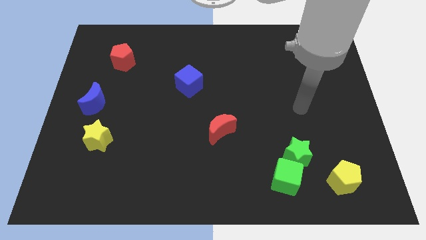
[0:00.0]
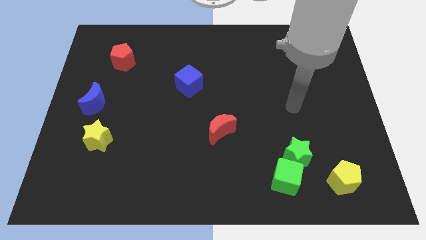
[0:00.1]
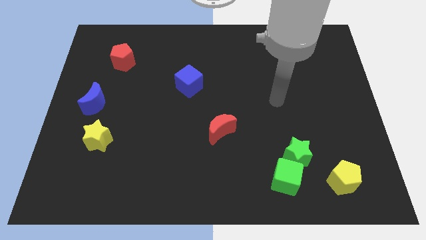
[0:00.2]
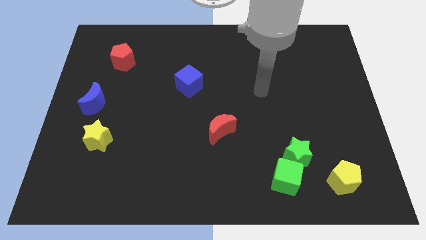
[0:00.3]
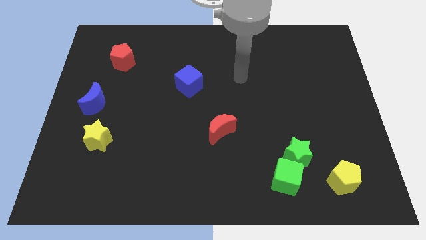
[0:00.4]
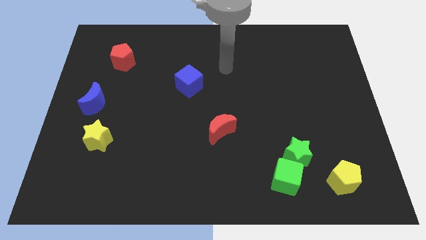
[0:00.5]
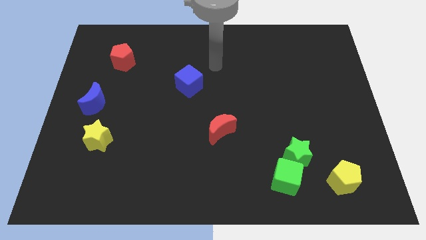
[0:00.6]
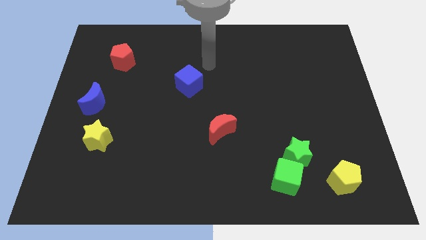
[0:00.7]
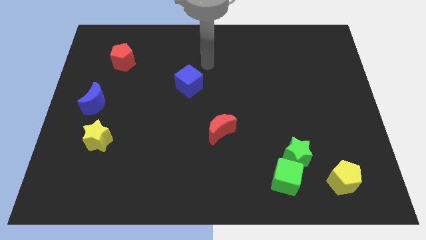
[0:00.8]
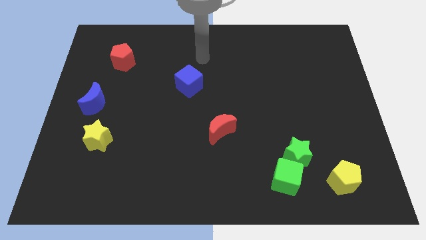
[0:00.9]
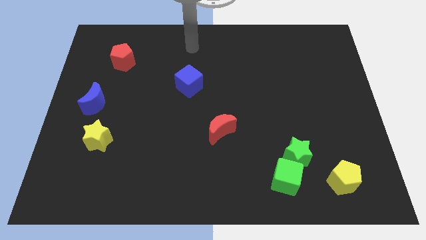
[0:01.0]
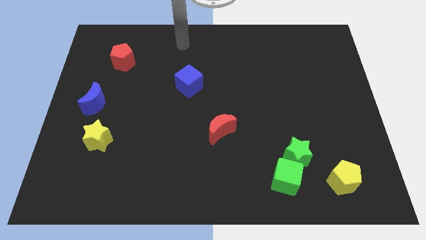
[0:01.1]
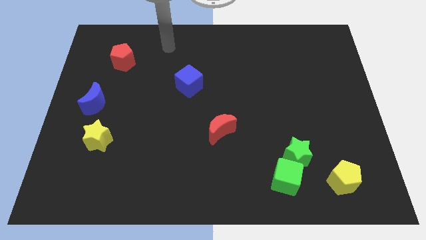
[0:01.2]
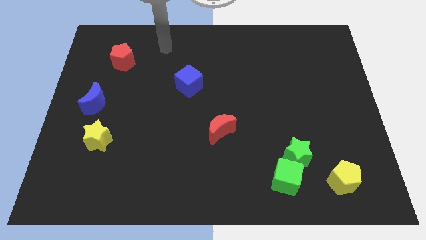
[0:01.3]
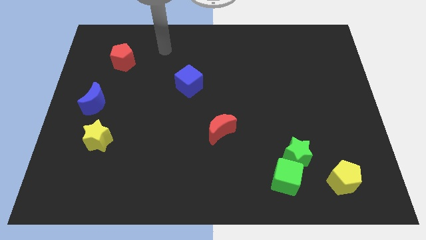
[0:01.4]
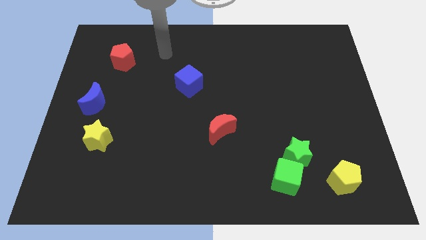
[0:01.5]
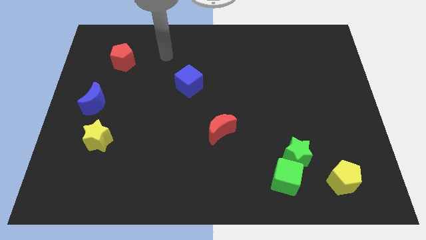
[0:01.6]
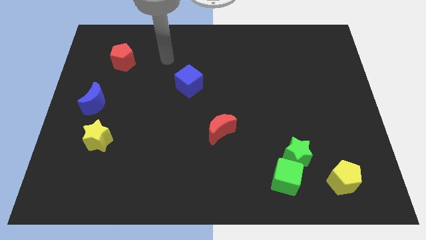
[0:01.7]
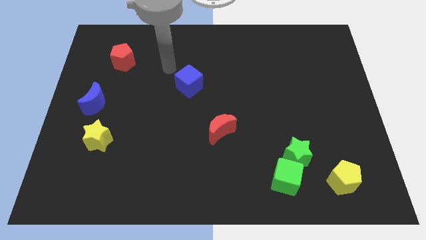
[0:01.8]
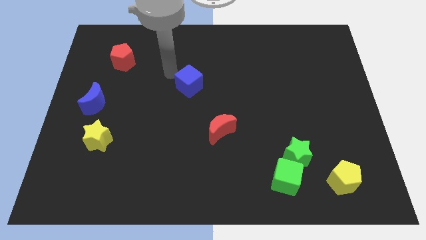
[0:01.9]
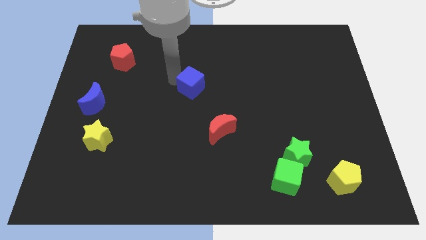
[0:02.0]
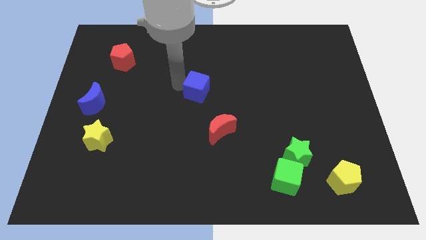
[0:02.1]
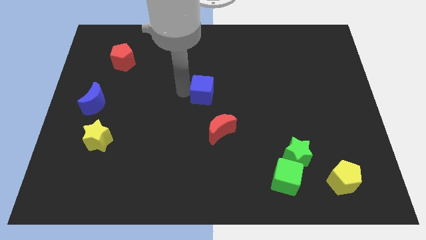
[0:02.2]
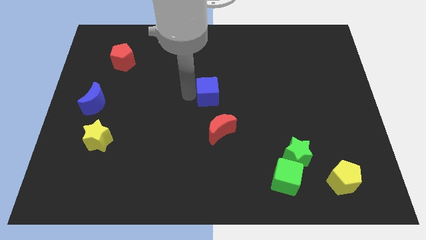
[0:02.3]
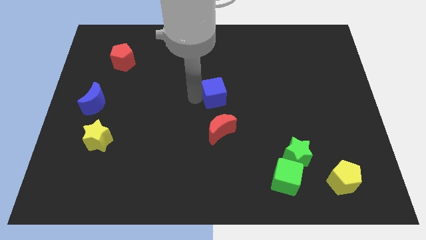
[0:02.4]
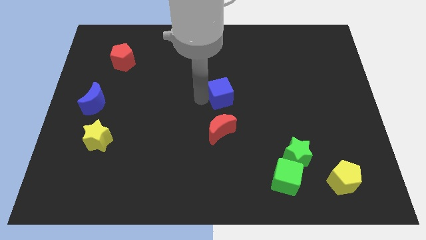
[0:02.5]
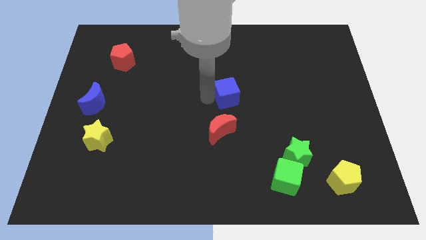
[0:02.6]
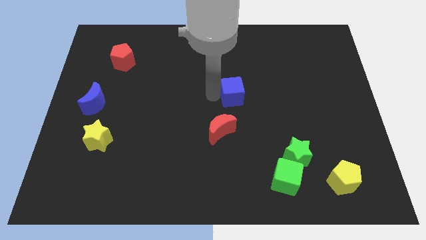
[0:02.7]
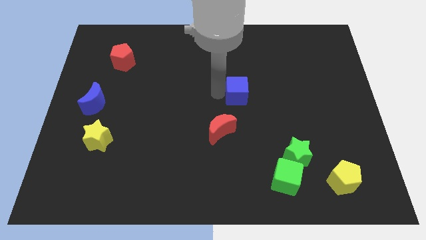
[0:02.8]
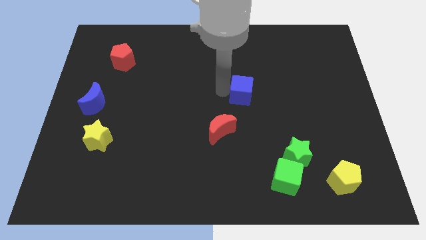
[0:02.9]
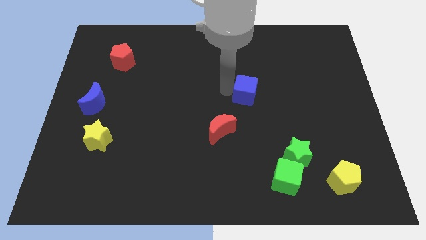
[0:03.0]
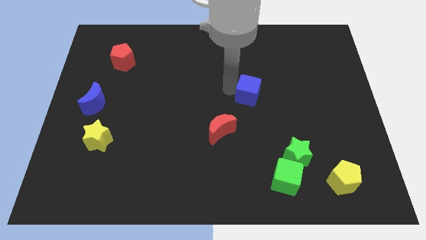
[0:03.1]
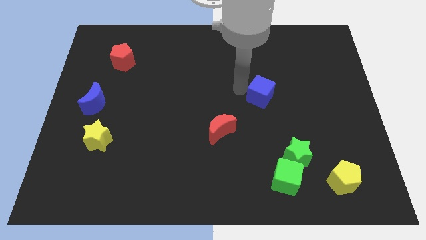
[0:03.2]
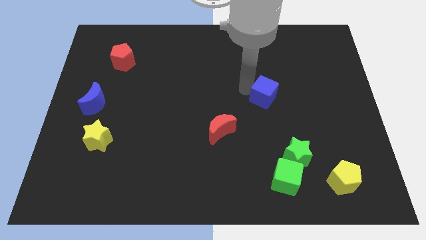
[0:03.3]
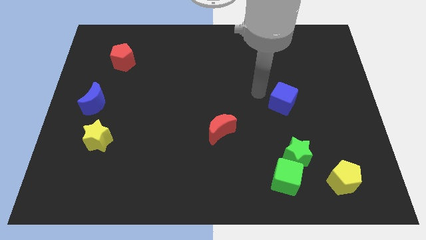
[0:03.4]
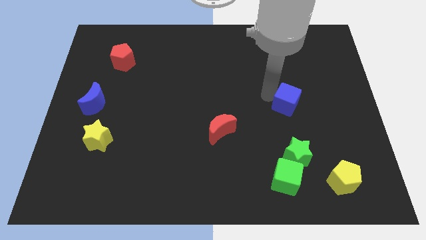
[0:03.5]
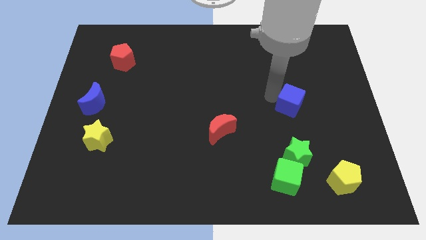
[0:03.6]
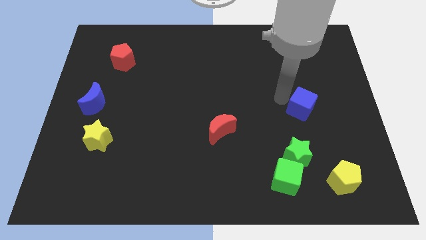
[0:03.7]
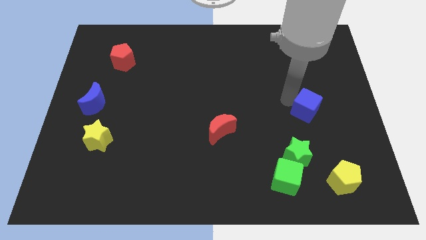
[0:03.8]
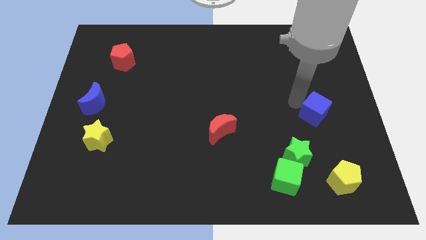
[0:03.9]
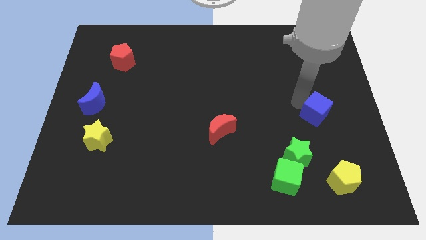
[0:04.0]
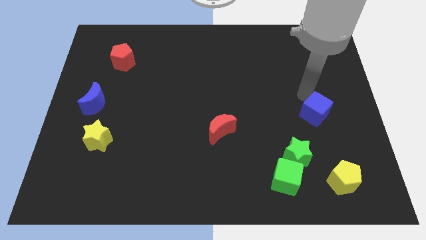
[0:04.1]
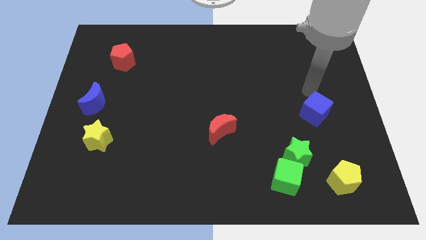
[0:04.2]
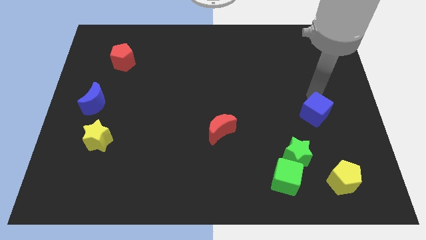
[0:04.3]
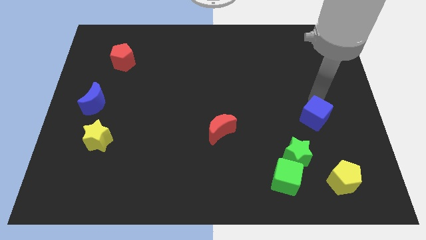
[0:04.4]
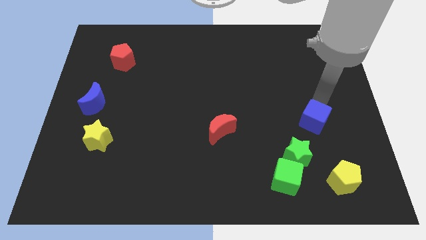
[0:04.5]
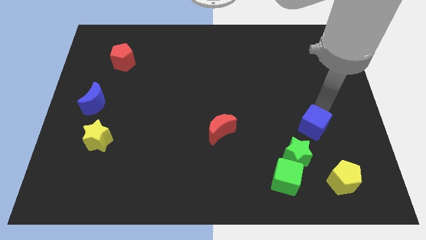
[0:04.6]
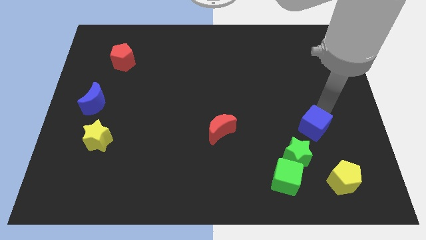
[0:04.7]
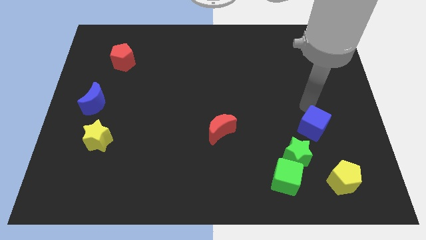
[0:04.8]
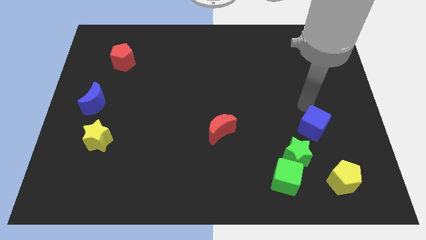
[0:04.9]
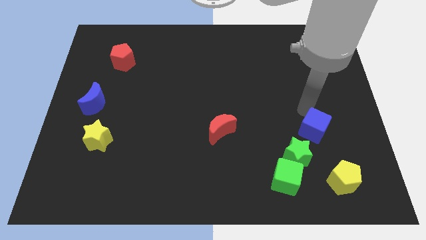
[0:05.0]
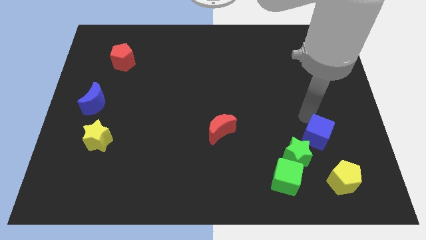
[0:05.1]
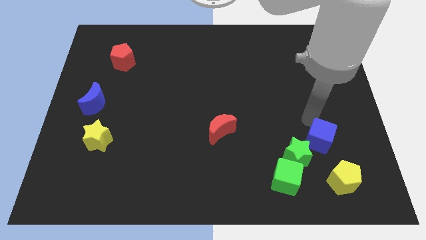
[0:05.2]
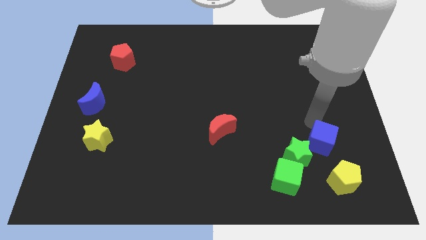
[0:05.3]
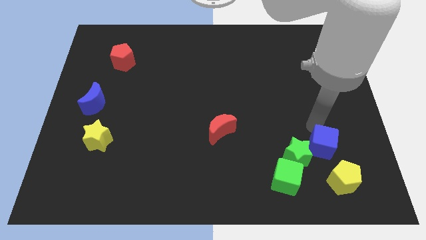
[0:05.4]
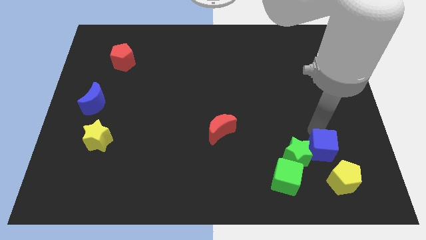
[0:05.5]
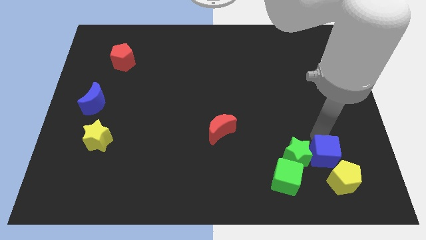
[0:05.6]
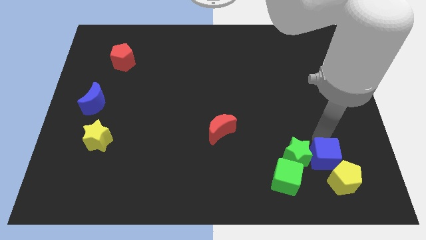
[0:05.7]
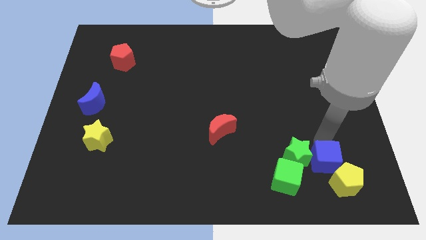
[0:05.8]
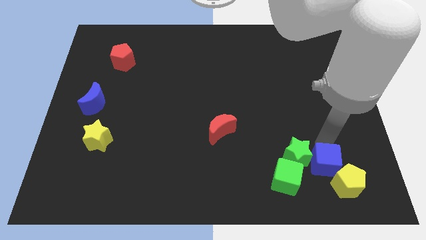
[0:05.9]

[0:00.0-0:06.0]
push the blue cube close to the yellow pentagon

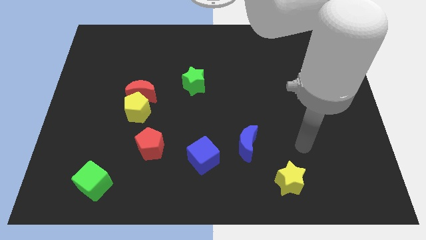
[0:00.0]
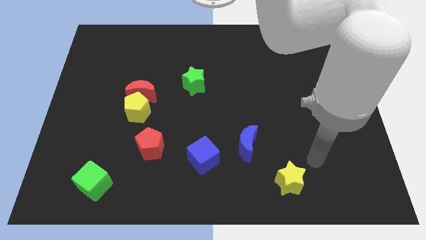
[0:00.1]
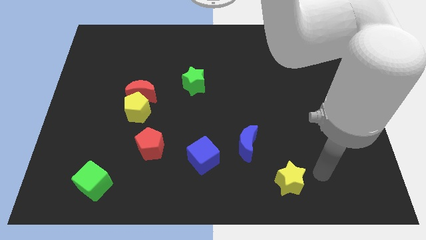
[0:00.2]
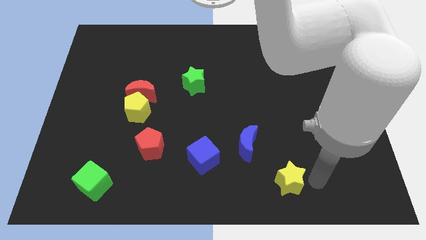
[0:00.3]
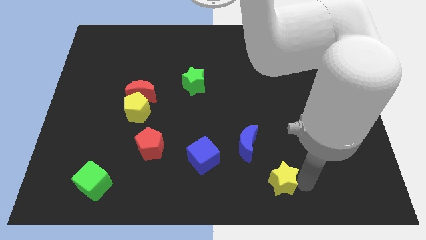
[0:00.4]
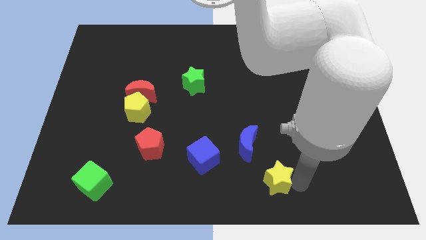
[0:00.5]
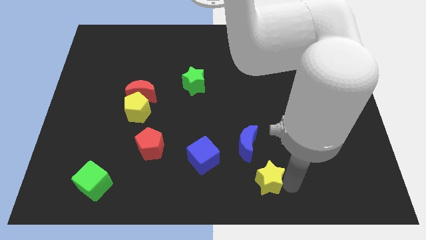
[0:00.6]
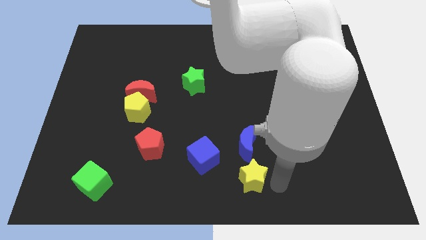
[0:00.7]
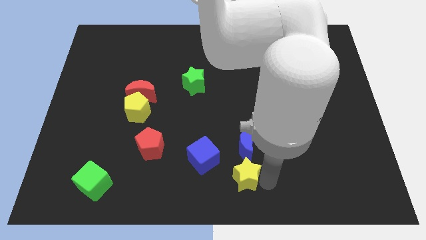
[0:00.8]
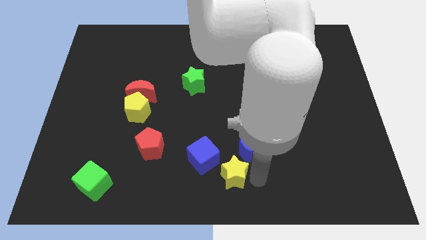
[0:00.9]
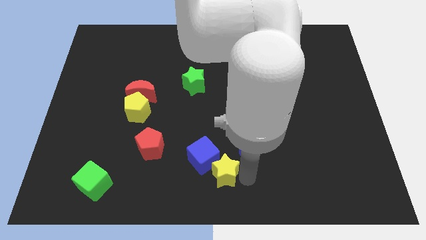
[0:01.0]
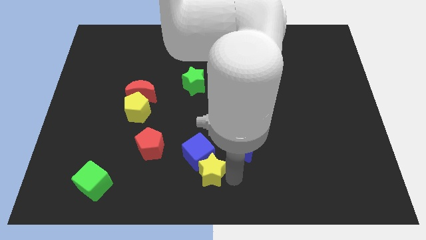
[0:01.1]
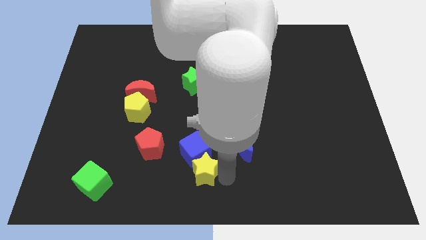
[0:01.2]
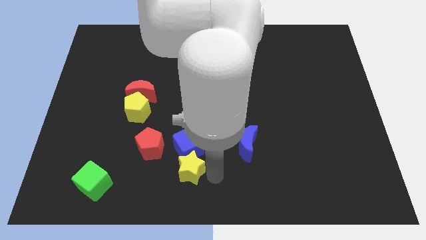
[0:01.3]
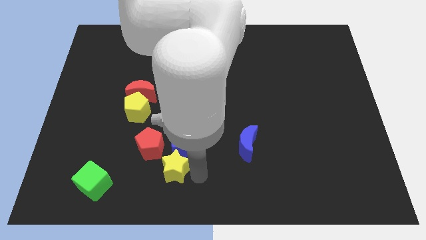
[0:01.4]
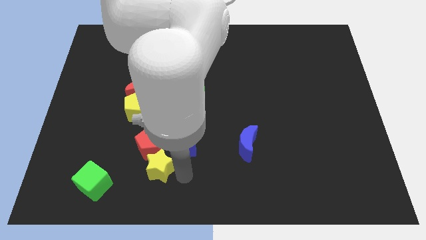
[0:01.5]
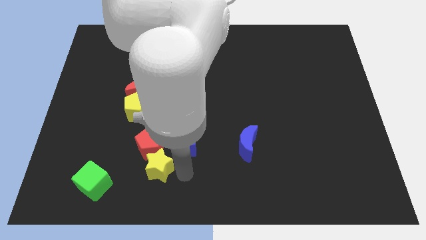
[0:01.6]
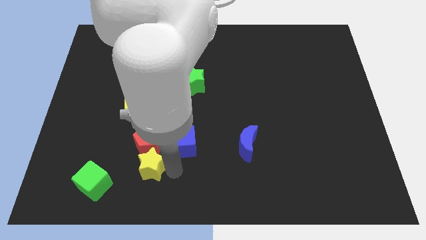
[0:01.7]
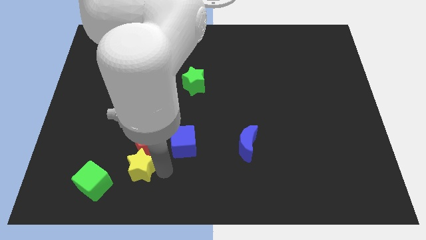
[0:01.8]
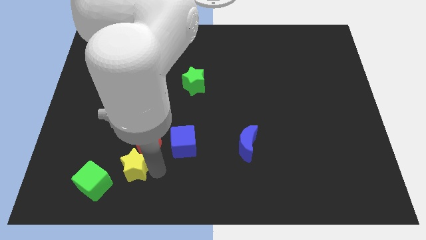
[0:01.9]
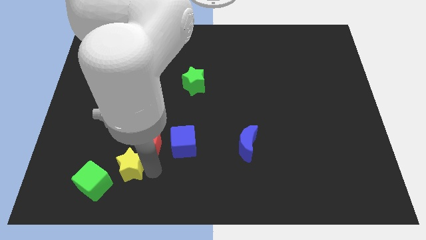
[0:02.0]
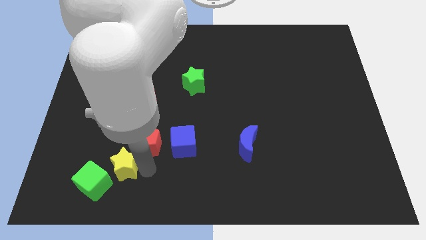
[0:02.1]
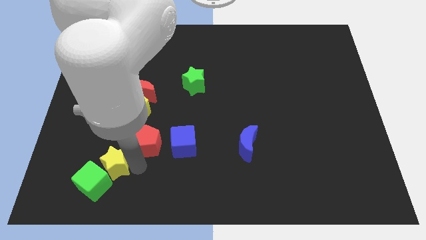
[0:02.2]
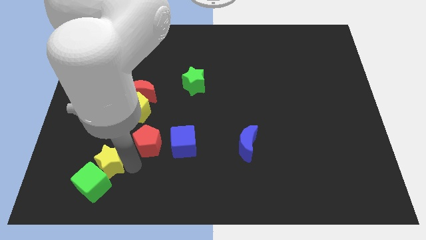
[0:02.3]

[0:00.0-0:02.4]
slide the yellow star next to the green cube
